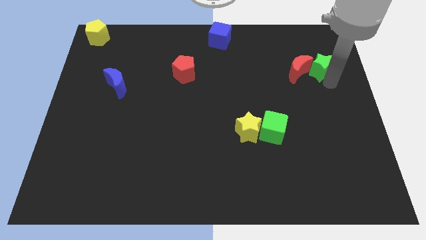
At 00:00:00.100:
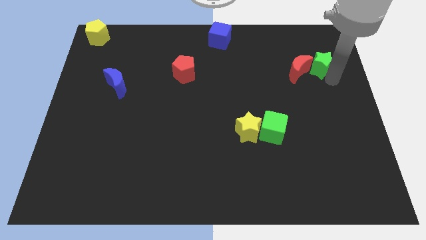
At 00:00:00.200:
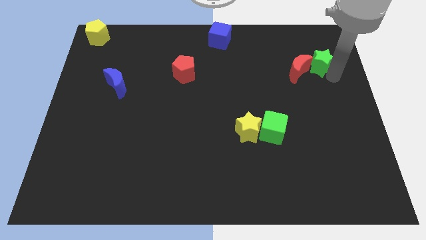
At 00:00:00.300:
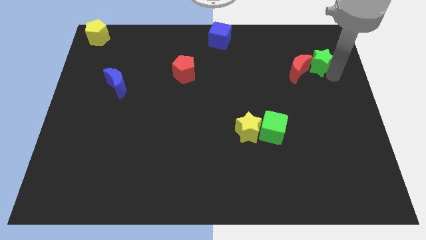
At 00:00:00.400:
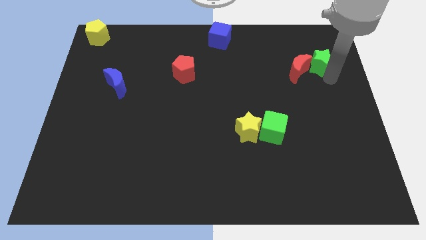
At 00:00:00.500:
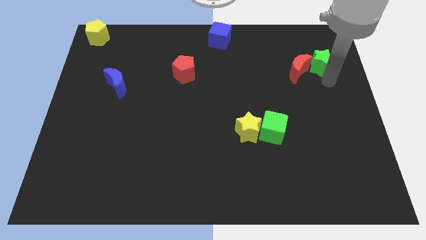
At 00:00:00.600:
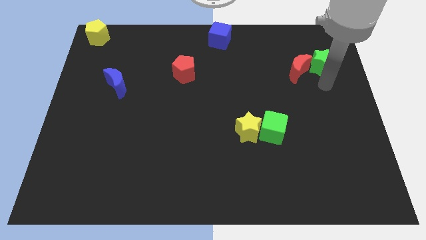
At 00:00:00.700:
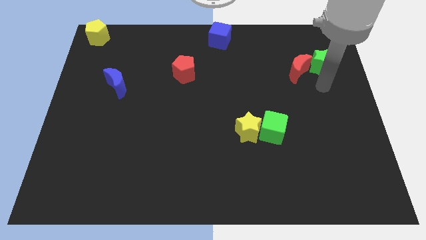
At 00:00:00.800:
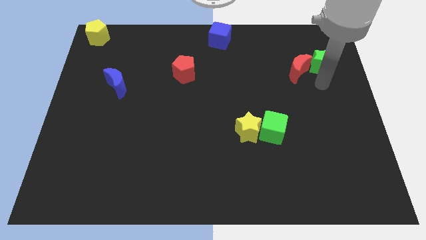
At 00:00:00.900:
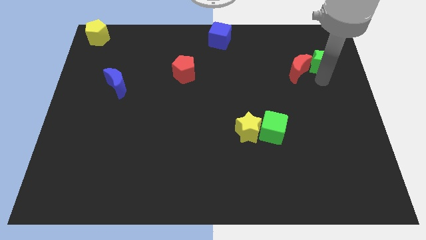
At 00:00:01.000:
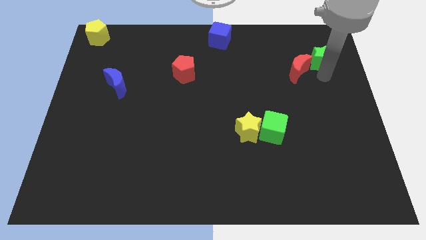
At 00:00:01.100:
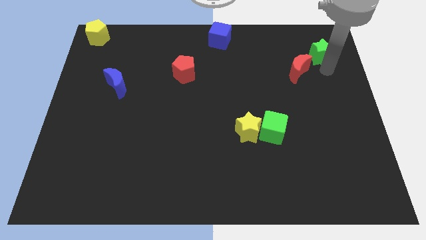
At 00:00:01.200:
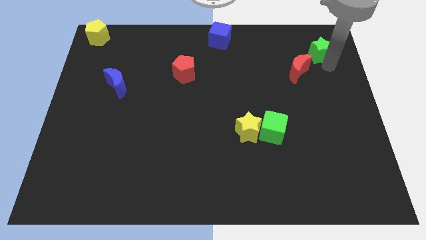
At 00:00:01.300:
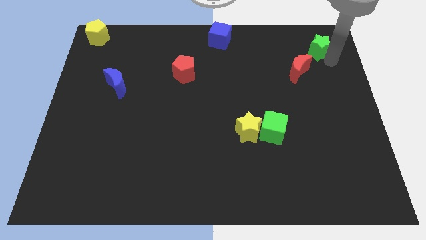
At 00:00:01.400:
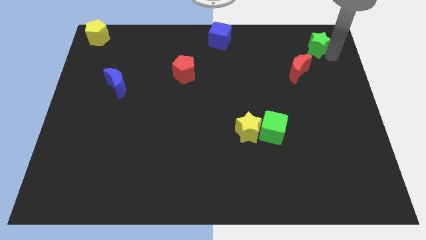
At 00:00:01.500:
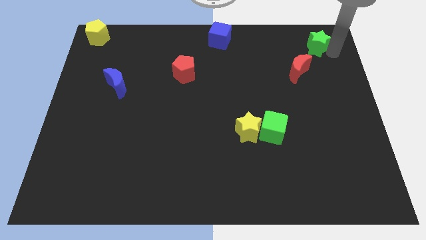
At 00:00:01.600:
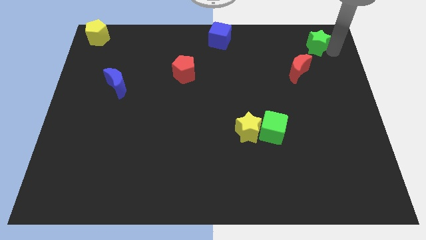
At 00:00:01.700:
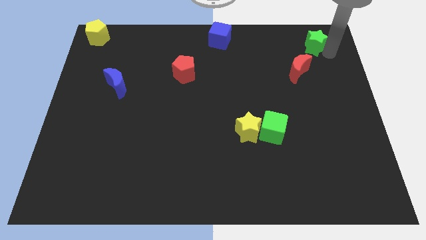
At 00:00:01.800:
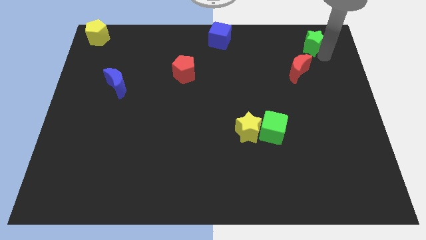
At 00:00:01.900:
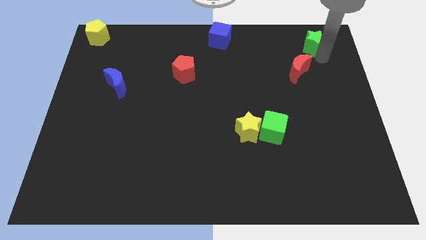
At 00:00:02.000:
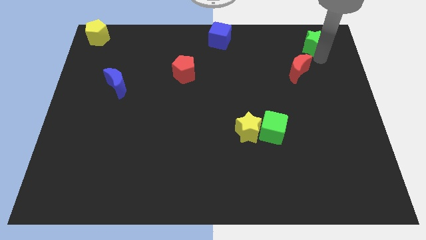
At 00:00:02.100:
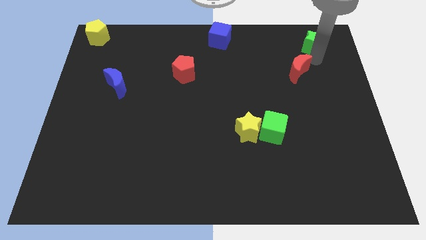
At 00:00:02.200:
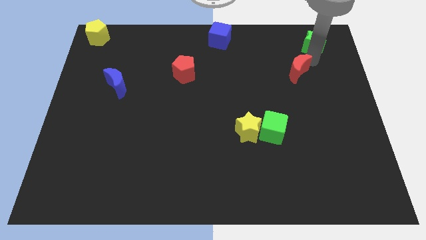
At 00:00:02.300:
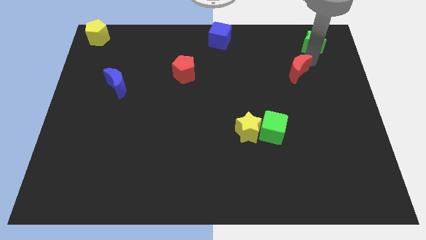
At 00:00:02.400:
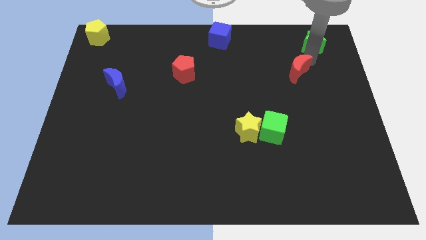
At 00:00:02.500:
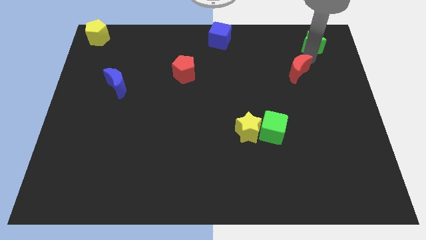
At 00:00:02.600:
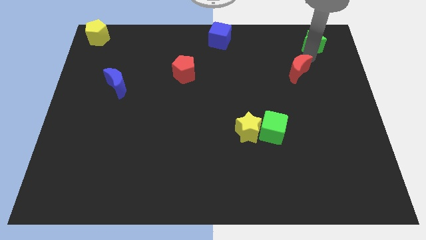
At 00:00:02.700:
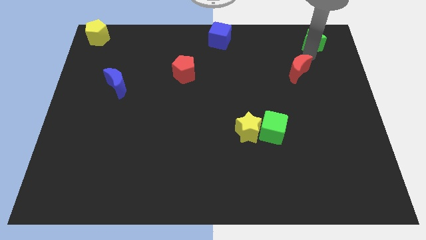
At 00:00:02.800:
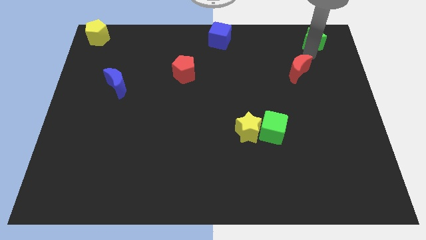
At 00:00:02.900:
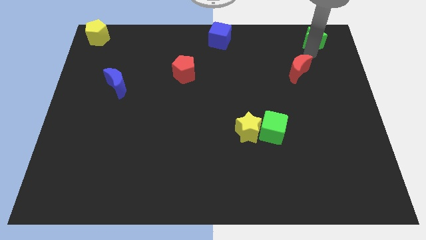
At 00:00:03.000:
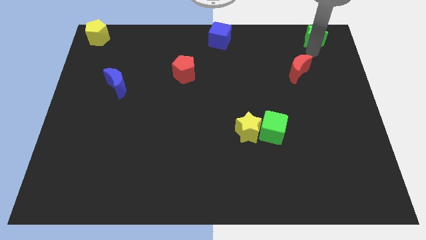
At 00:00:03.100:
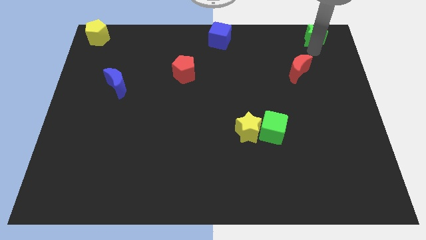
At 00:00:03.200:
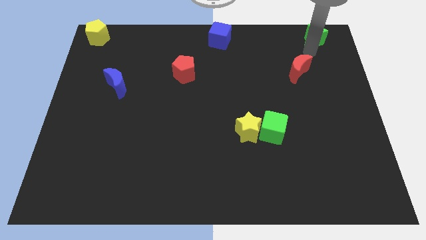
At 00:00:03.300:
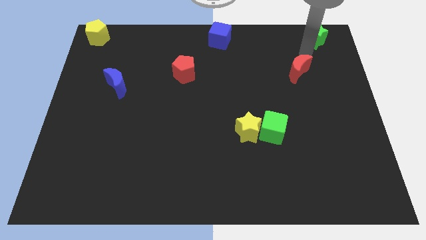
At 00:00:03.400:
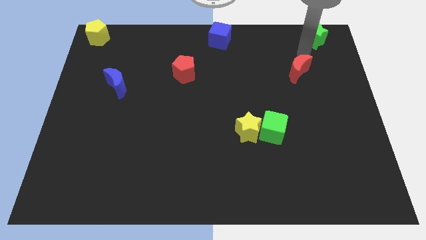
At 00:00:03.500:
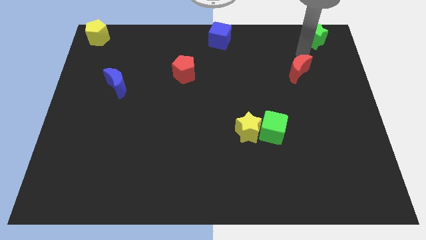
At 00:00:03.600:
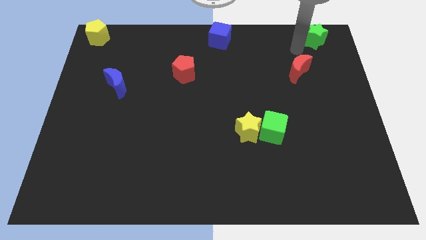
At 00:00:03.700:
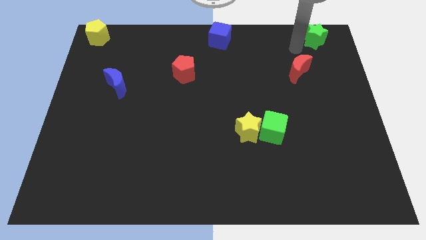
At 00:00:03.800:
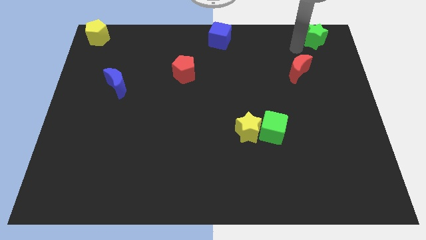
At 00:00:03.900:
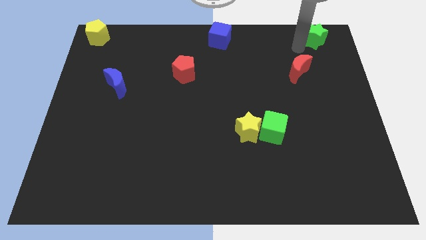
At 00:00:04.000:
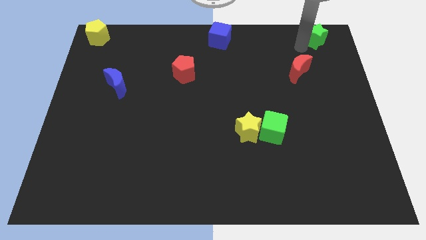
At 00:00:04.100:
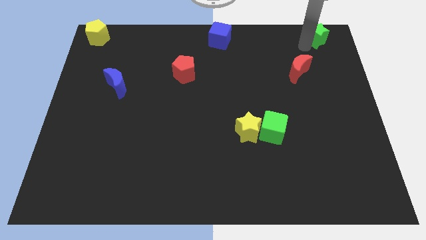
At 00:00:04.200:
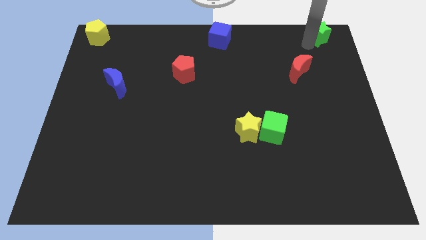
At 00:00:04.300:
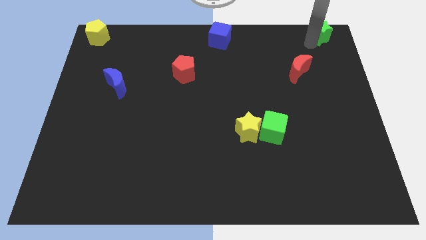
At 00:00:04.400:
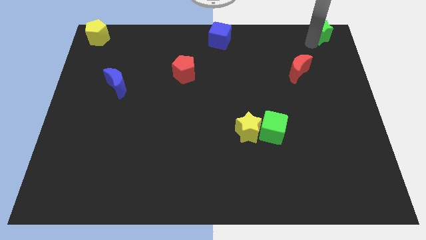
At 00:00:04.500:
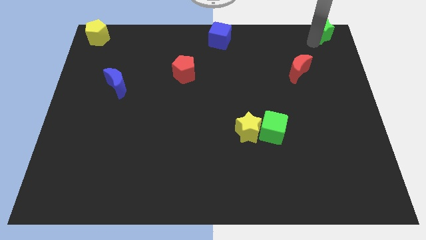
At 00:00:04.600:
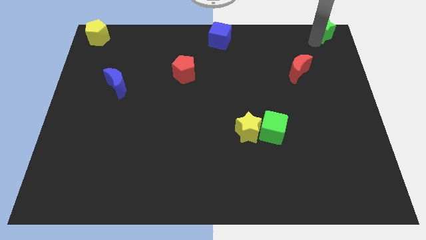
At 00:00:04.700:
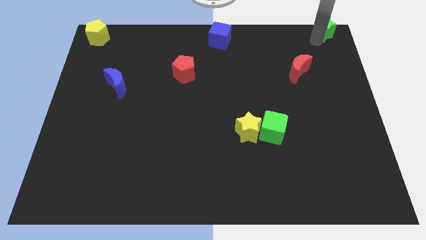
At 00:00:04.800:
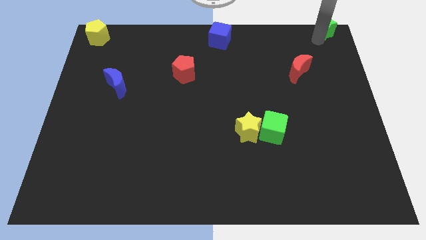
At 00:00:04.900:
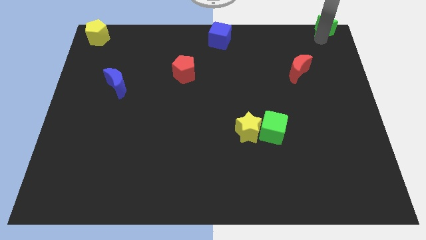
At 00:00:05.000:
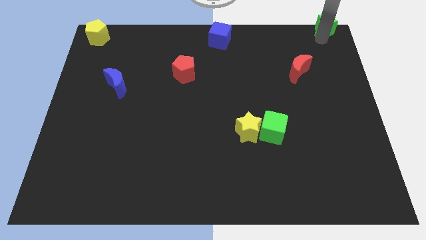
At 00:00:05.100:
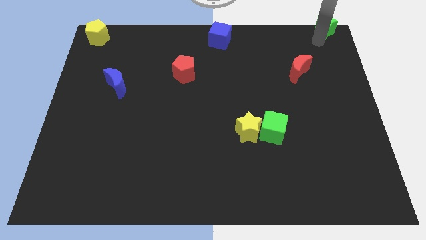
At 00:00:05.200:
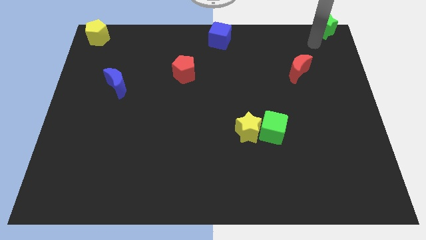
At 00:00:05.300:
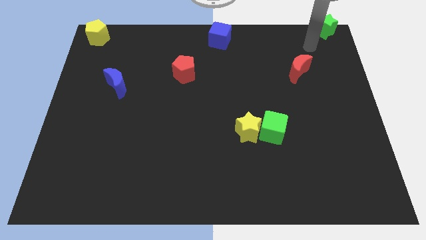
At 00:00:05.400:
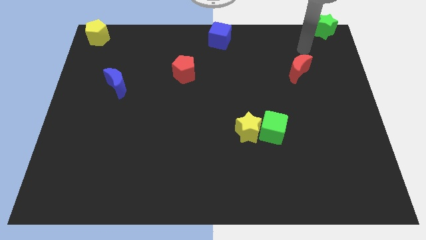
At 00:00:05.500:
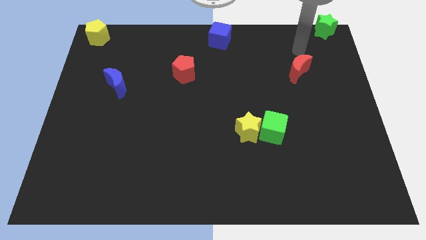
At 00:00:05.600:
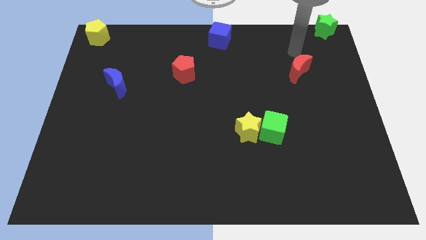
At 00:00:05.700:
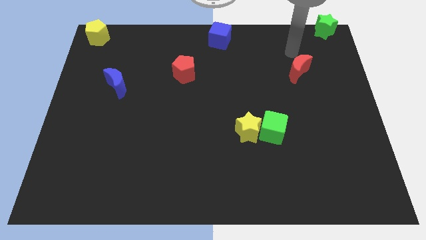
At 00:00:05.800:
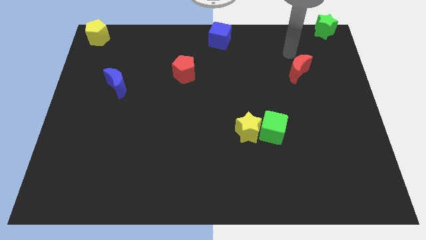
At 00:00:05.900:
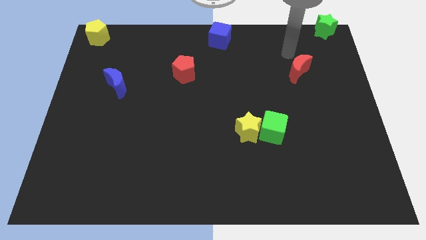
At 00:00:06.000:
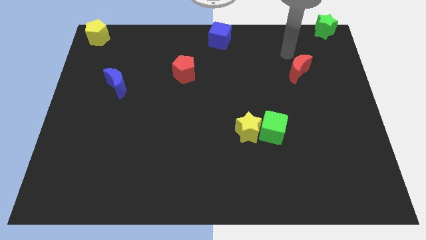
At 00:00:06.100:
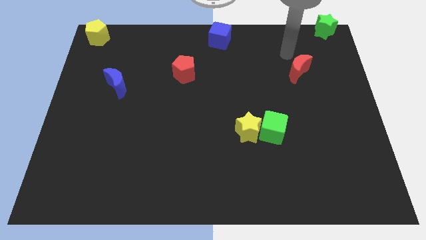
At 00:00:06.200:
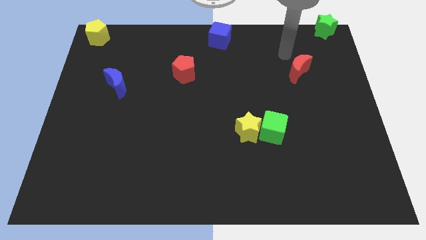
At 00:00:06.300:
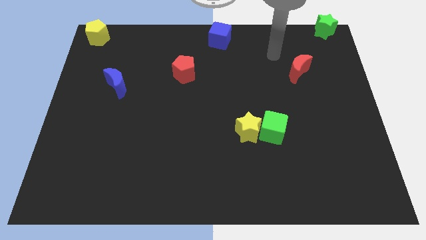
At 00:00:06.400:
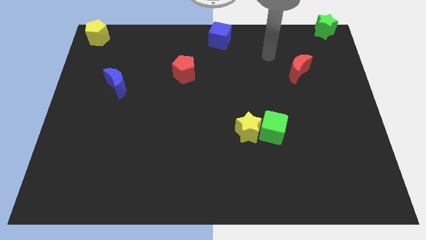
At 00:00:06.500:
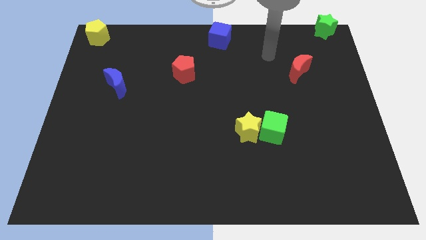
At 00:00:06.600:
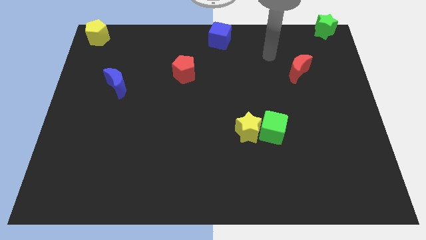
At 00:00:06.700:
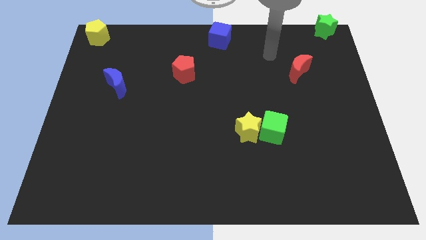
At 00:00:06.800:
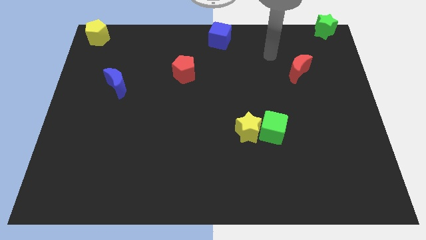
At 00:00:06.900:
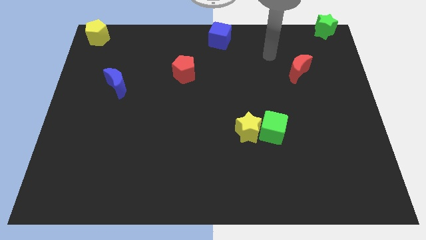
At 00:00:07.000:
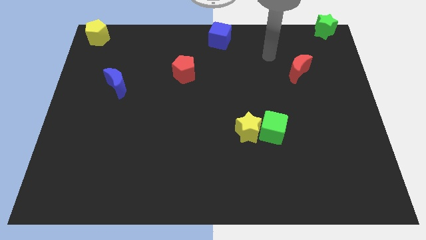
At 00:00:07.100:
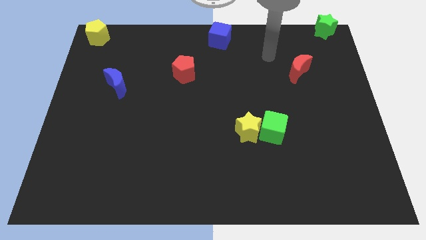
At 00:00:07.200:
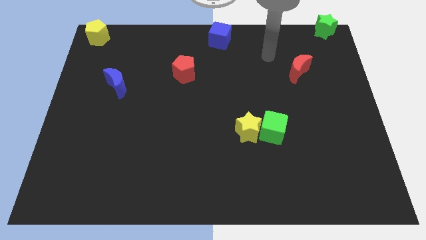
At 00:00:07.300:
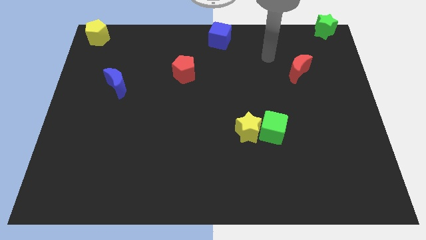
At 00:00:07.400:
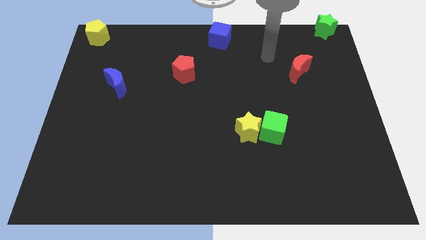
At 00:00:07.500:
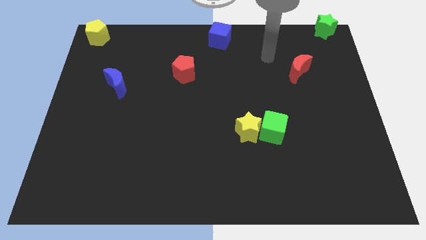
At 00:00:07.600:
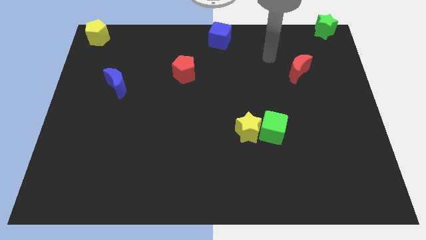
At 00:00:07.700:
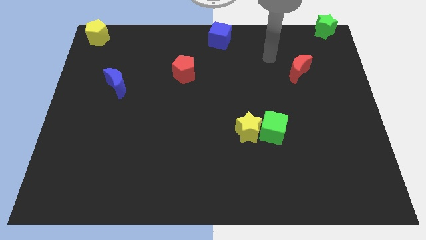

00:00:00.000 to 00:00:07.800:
place green star to the top right corner of the board

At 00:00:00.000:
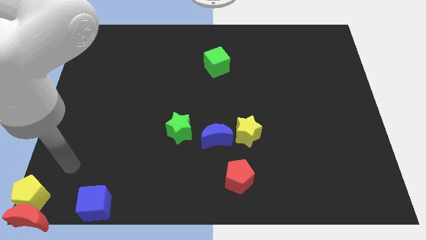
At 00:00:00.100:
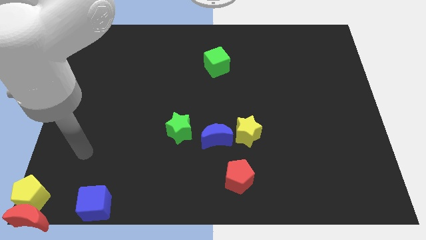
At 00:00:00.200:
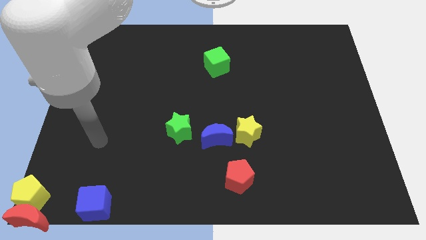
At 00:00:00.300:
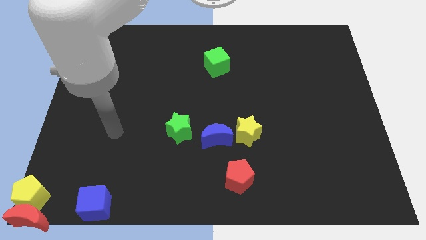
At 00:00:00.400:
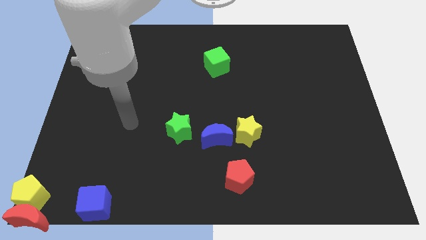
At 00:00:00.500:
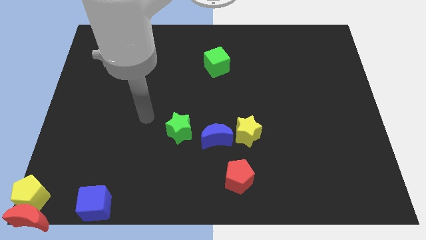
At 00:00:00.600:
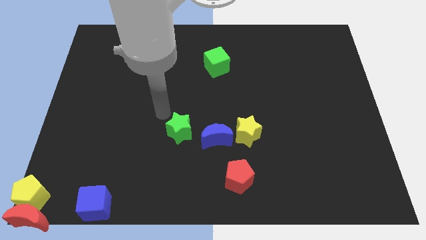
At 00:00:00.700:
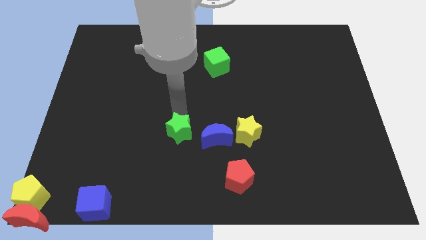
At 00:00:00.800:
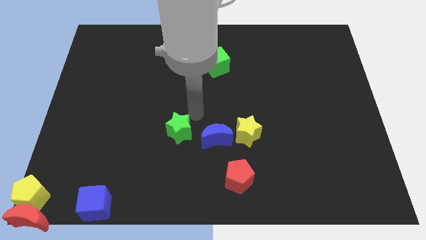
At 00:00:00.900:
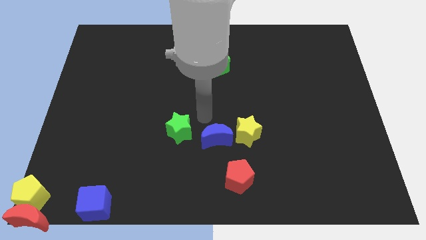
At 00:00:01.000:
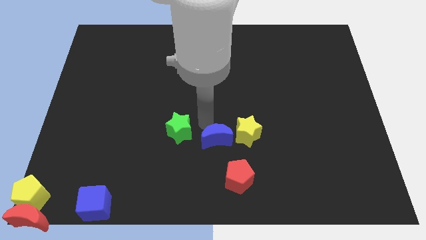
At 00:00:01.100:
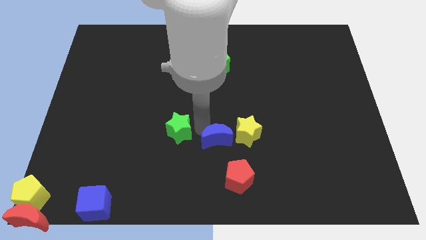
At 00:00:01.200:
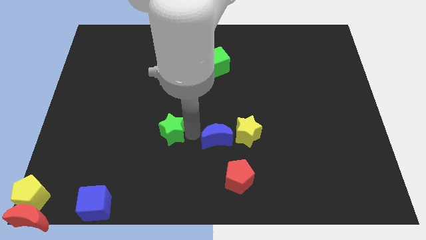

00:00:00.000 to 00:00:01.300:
move your arm towards the green star
